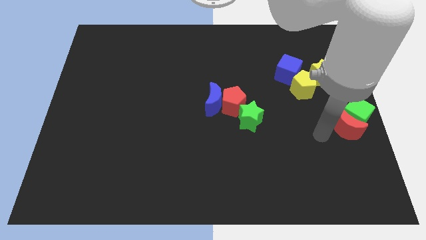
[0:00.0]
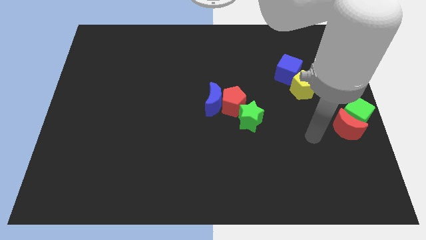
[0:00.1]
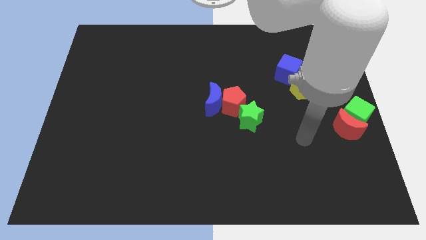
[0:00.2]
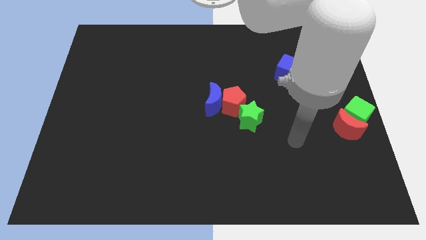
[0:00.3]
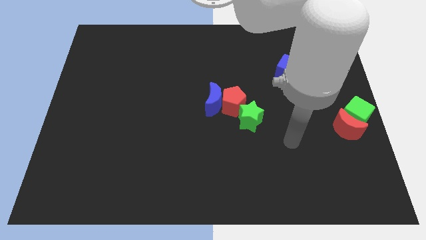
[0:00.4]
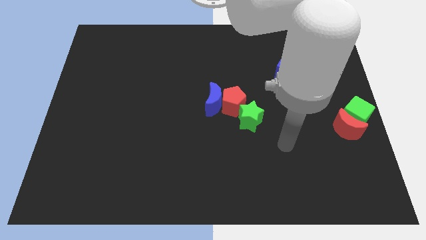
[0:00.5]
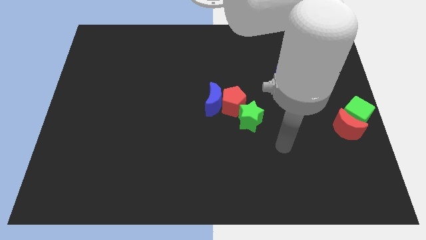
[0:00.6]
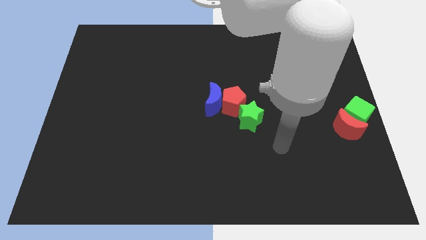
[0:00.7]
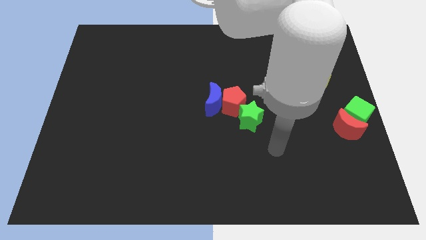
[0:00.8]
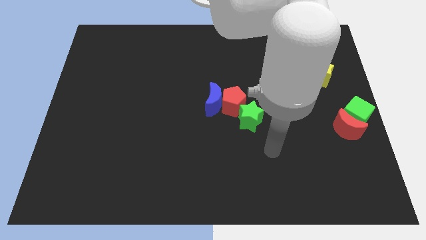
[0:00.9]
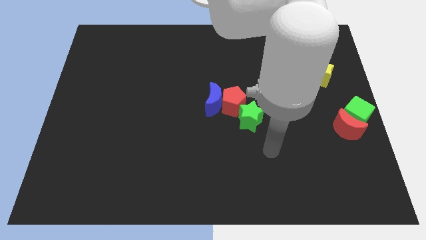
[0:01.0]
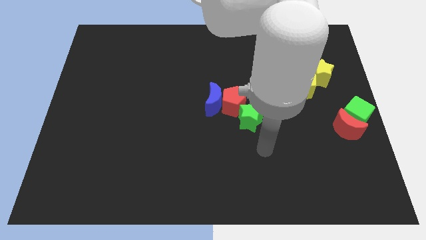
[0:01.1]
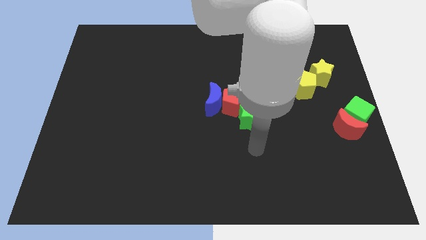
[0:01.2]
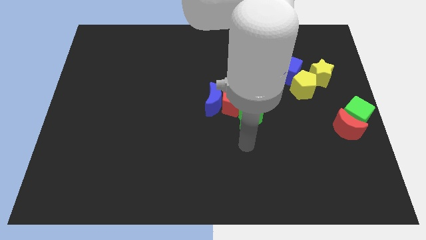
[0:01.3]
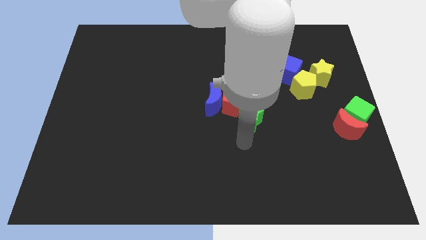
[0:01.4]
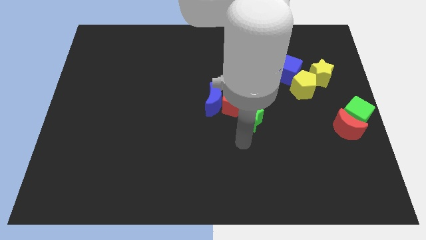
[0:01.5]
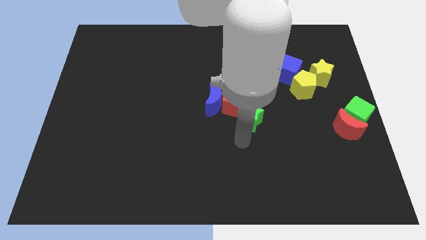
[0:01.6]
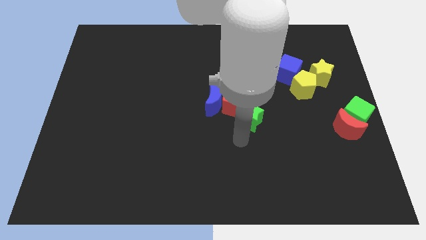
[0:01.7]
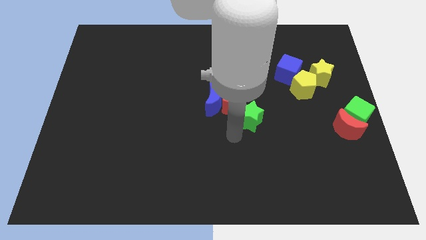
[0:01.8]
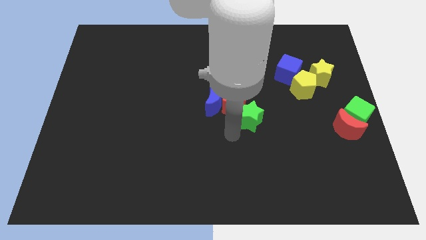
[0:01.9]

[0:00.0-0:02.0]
move the arm towards green star

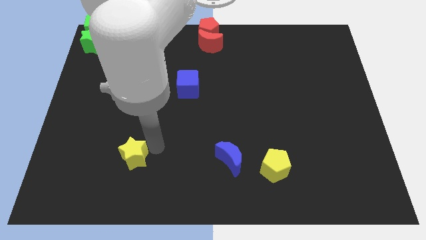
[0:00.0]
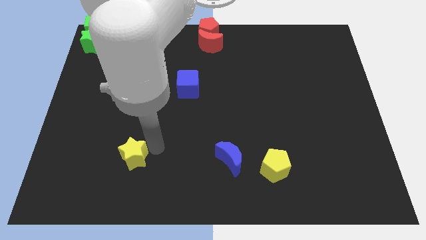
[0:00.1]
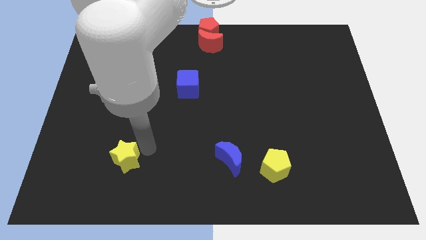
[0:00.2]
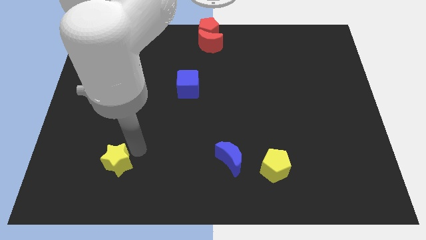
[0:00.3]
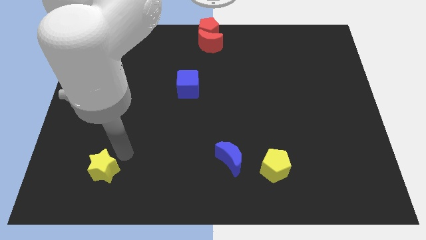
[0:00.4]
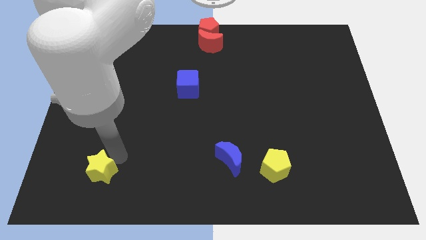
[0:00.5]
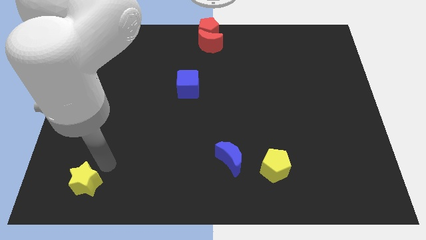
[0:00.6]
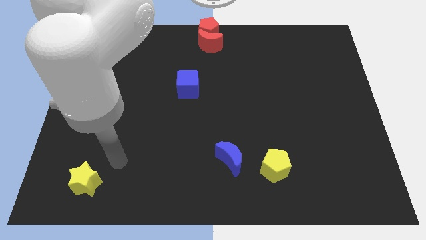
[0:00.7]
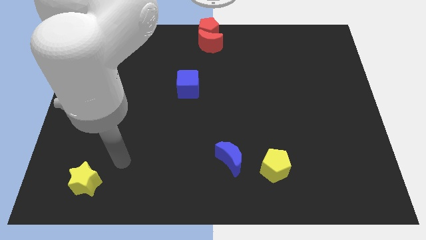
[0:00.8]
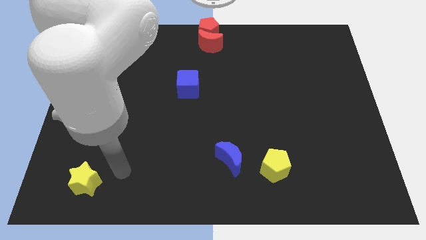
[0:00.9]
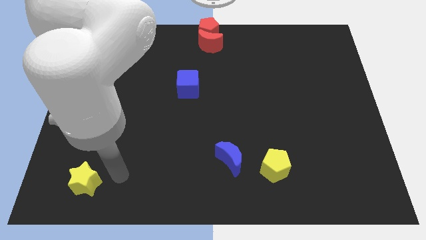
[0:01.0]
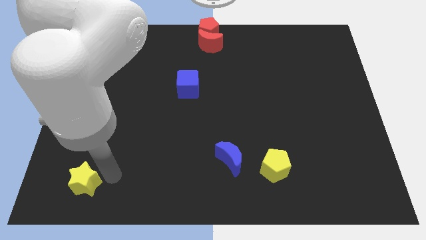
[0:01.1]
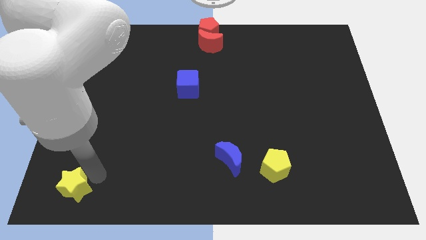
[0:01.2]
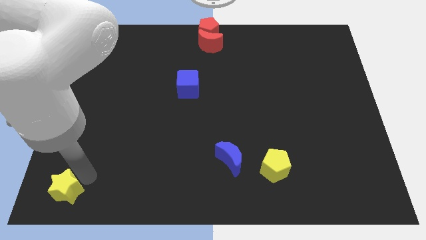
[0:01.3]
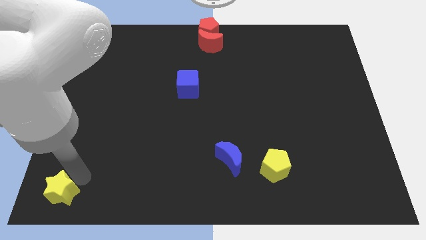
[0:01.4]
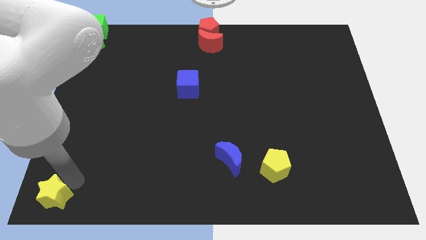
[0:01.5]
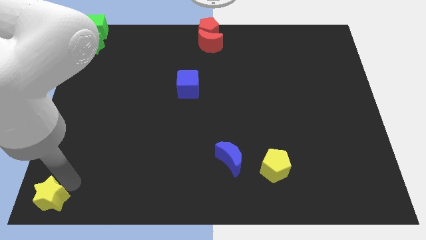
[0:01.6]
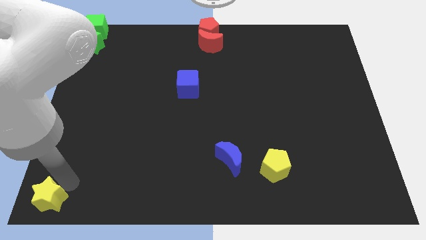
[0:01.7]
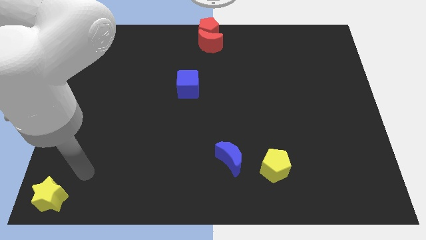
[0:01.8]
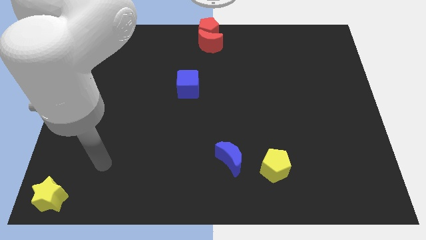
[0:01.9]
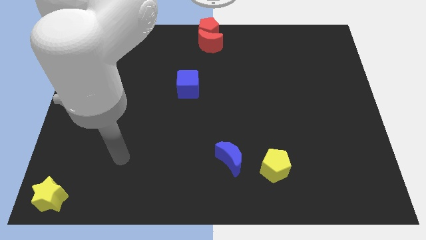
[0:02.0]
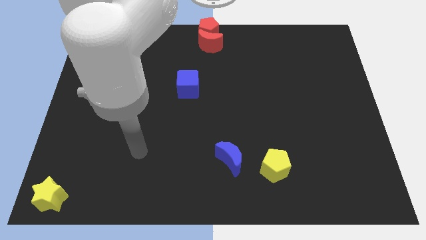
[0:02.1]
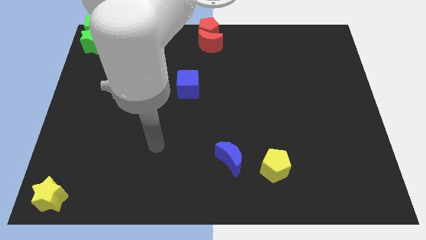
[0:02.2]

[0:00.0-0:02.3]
place the yellow star to the vertical bottom side of the green star

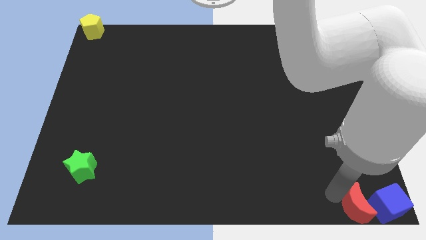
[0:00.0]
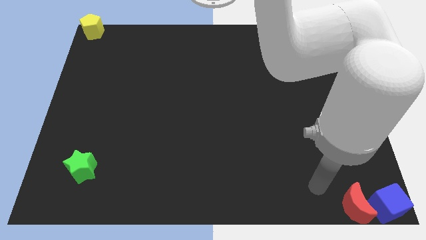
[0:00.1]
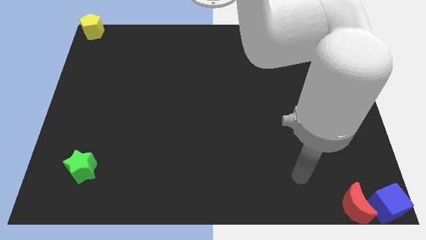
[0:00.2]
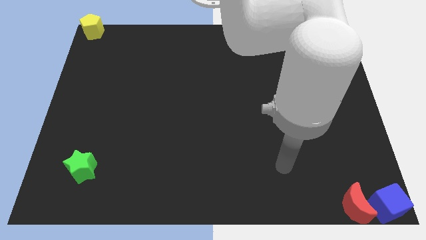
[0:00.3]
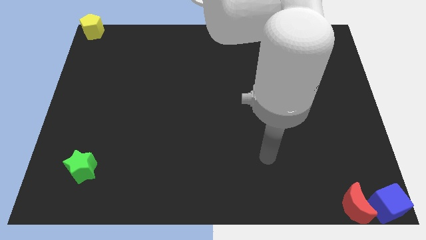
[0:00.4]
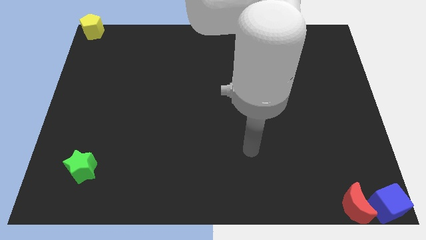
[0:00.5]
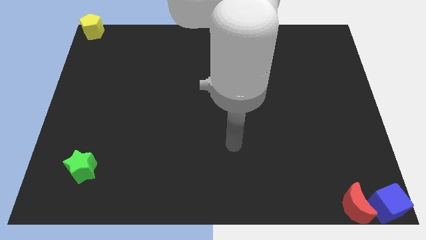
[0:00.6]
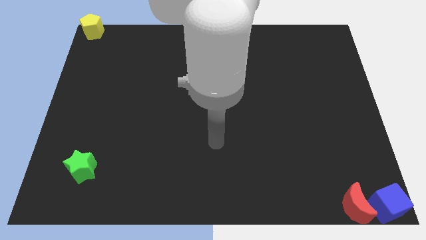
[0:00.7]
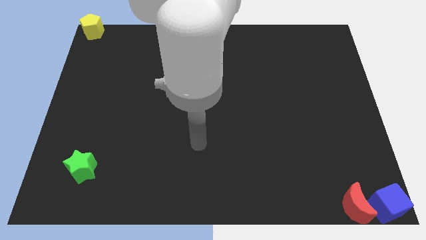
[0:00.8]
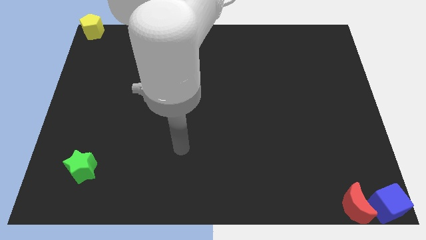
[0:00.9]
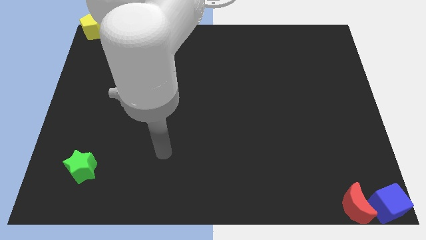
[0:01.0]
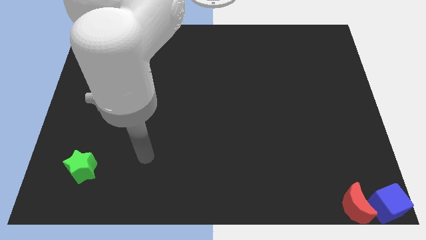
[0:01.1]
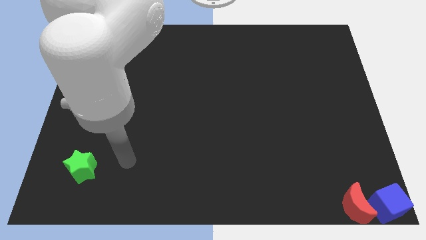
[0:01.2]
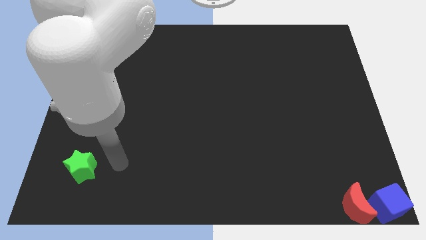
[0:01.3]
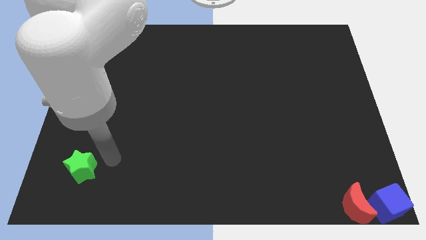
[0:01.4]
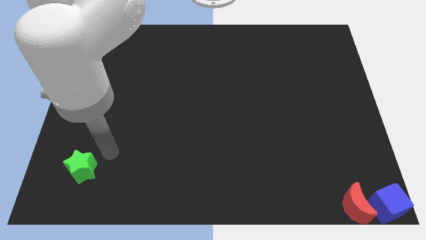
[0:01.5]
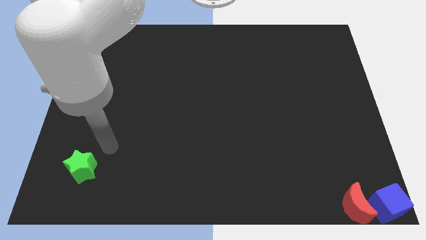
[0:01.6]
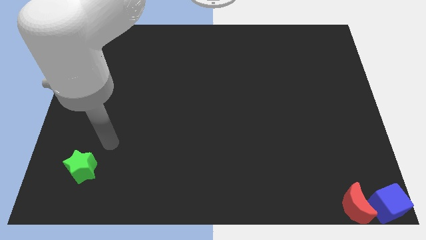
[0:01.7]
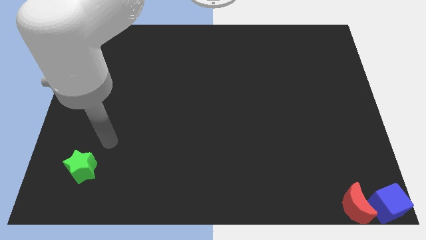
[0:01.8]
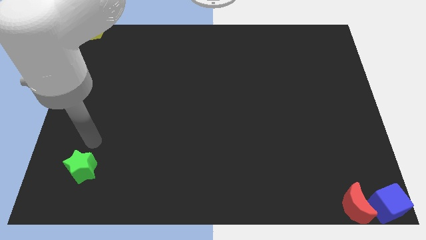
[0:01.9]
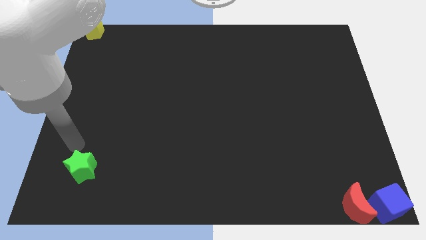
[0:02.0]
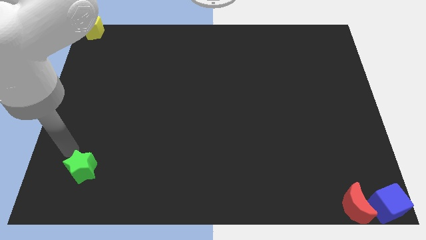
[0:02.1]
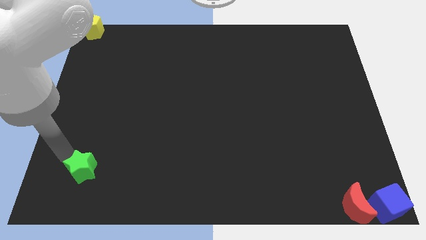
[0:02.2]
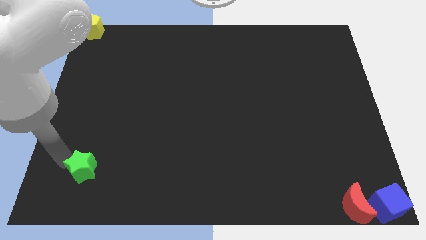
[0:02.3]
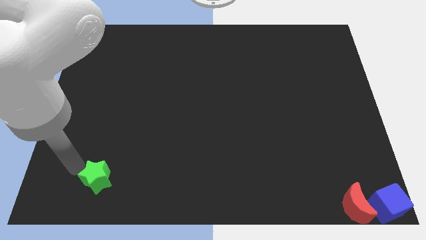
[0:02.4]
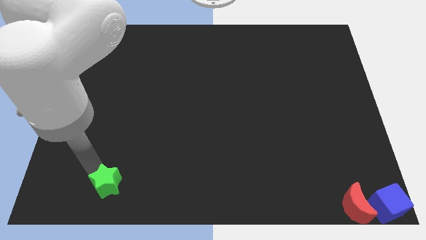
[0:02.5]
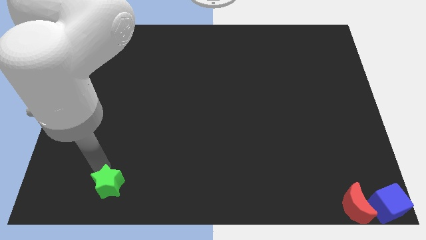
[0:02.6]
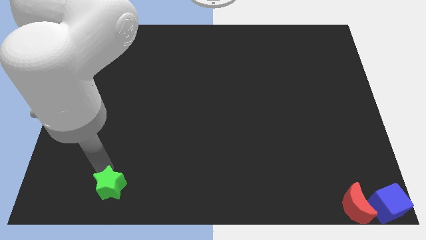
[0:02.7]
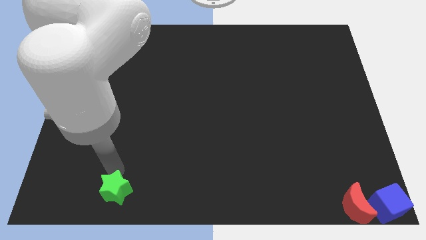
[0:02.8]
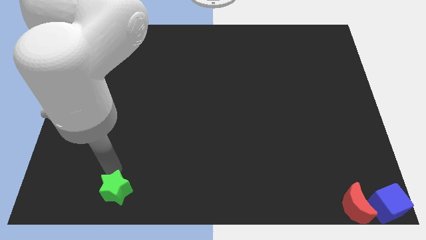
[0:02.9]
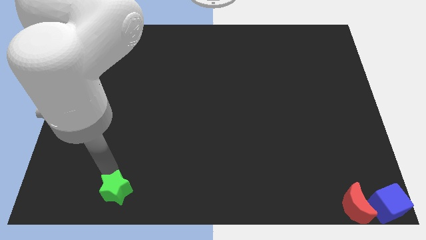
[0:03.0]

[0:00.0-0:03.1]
move your arm away from the red moon

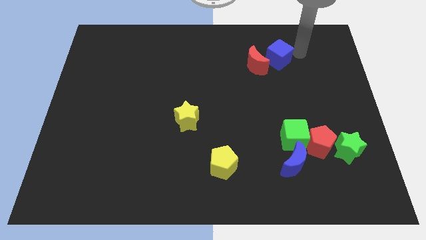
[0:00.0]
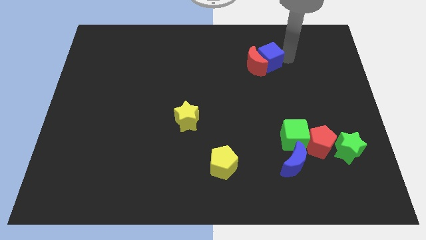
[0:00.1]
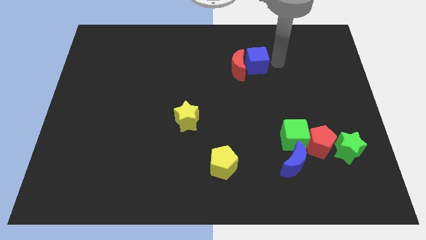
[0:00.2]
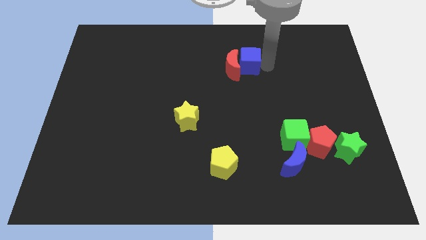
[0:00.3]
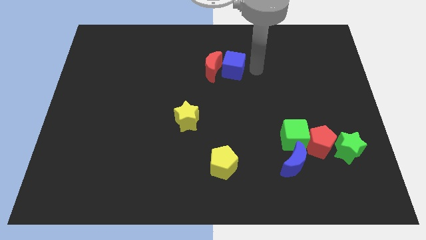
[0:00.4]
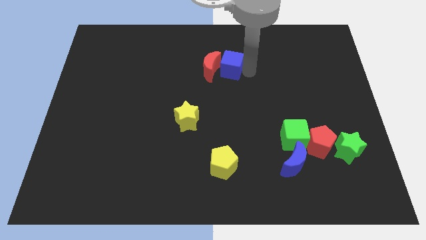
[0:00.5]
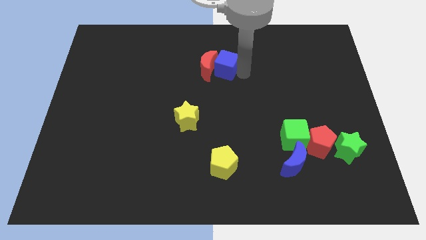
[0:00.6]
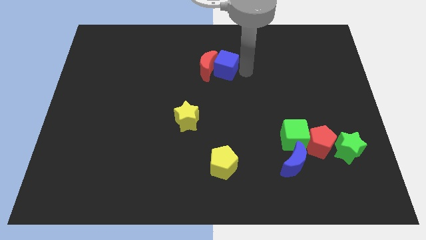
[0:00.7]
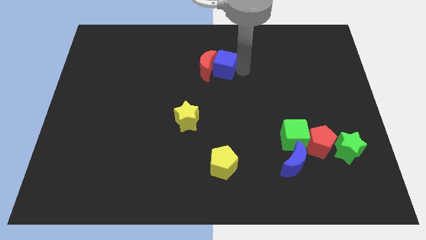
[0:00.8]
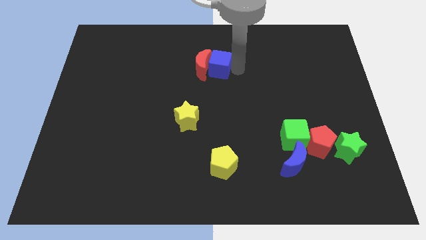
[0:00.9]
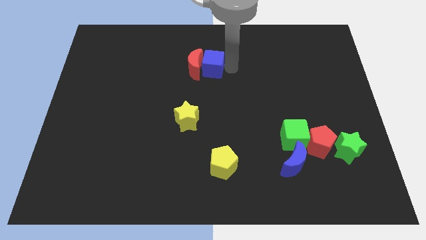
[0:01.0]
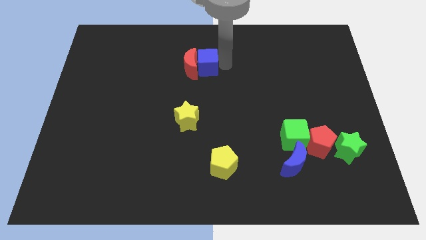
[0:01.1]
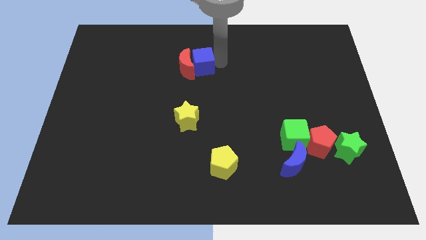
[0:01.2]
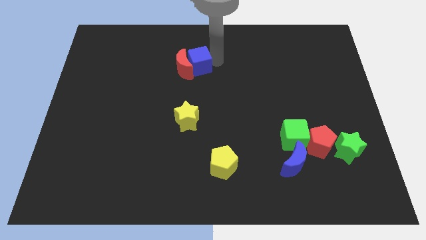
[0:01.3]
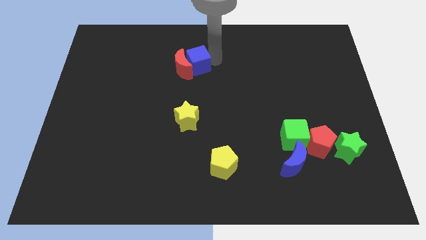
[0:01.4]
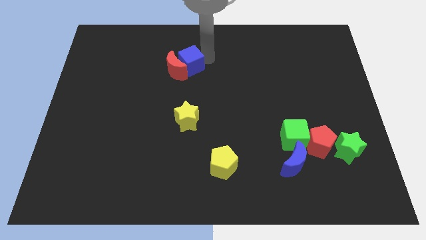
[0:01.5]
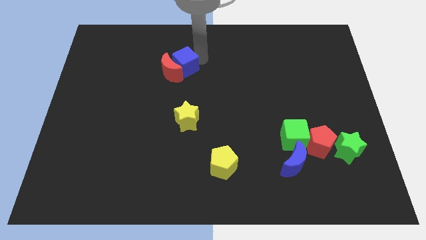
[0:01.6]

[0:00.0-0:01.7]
slide the blue cube and red crescent to the top side of the yellow star
